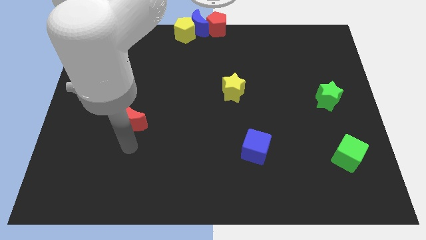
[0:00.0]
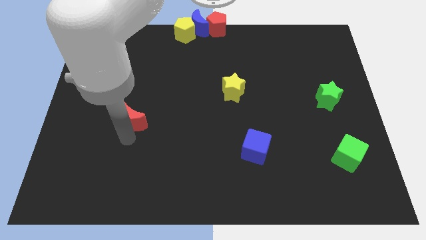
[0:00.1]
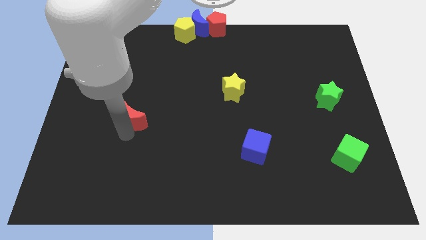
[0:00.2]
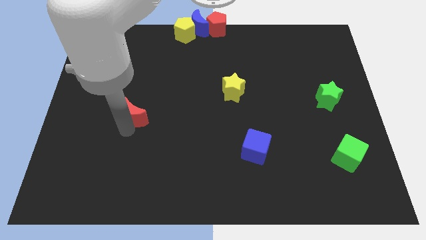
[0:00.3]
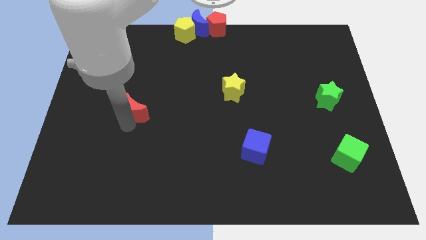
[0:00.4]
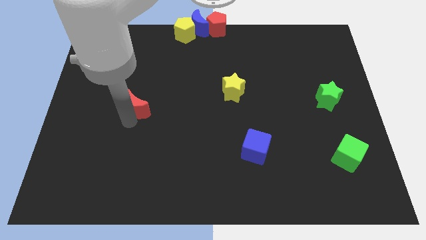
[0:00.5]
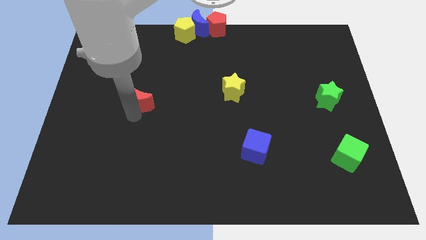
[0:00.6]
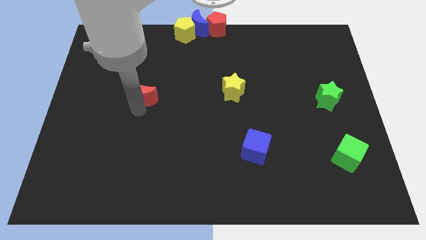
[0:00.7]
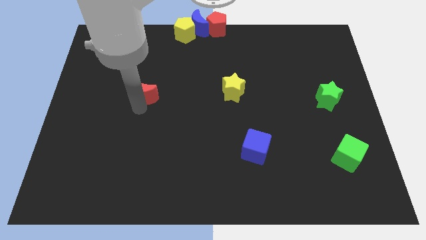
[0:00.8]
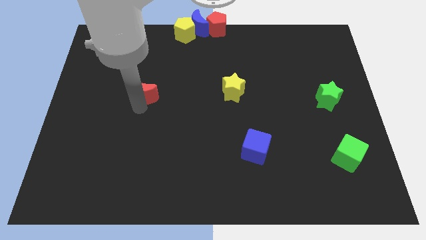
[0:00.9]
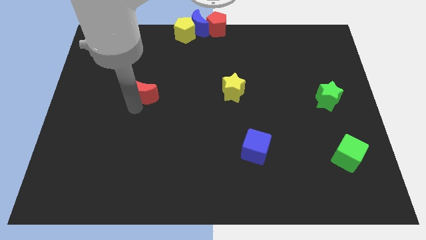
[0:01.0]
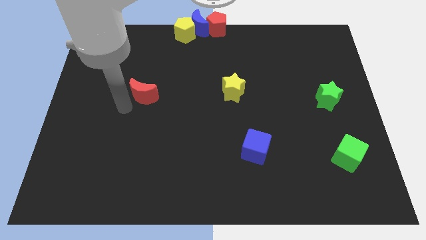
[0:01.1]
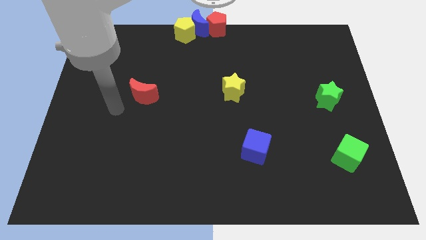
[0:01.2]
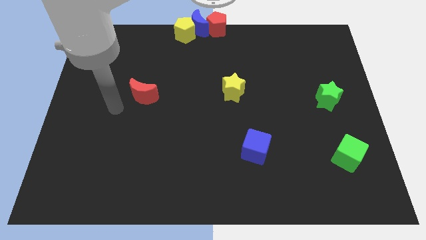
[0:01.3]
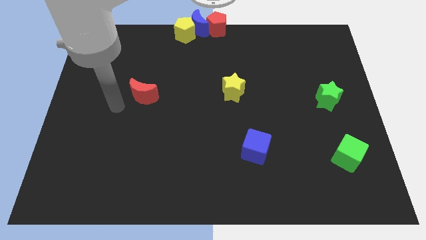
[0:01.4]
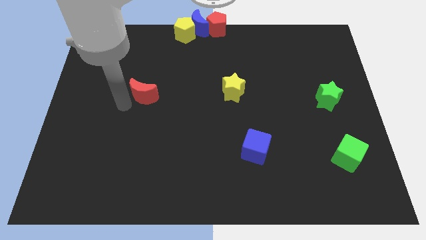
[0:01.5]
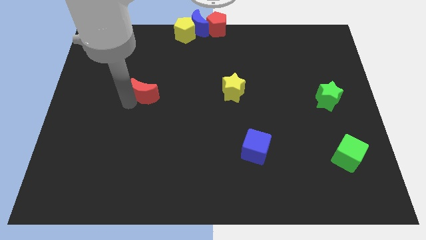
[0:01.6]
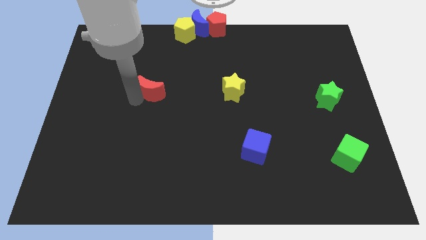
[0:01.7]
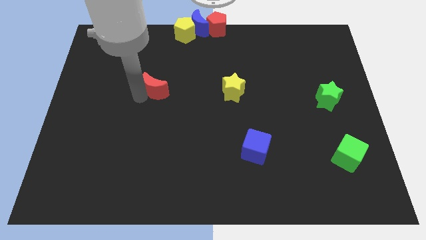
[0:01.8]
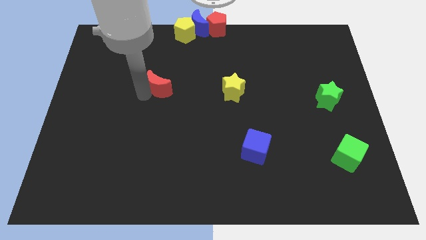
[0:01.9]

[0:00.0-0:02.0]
move the red crescent horizontally to the left side of the yellow star

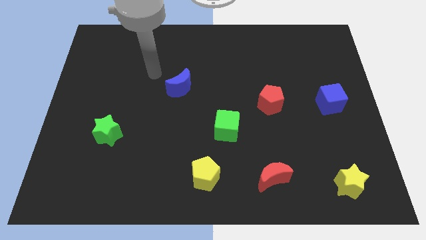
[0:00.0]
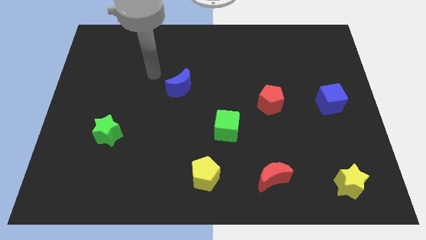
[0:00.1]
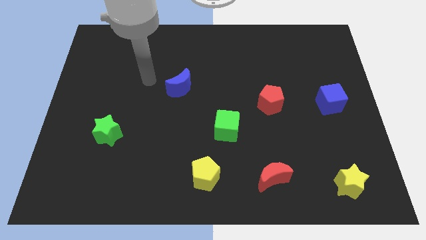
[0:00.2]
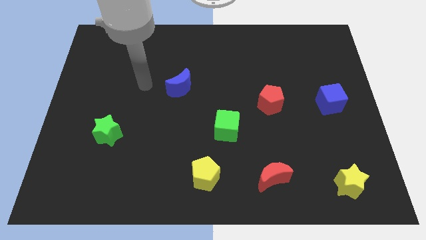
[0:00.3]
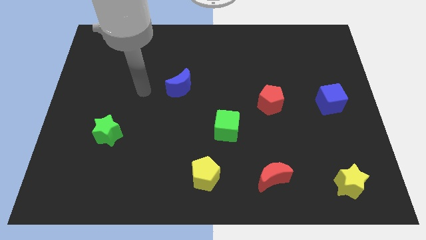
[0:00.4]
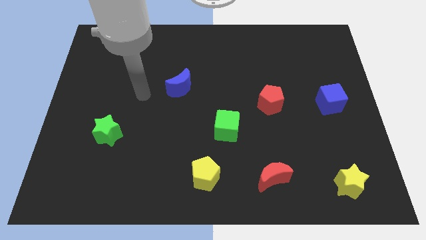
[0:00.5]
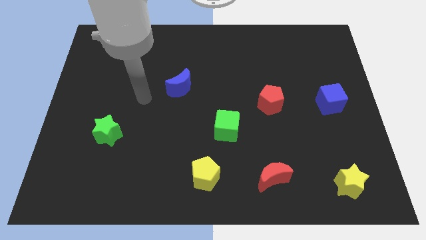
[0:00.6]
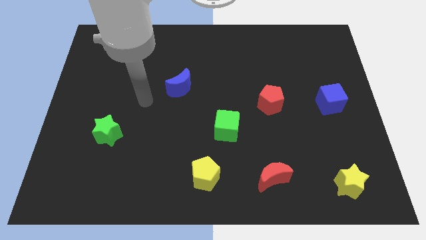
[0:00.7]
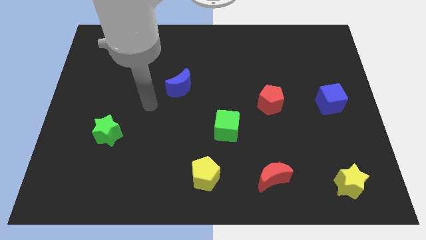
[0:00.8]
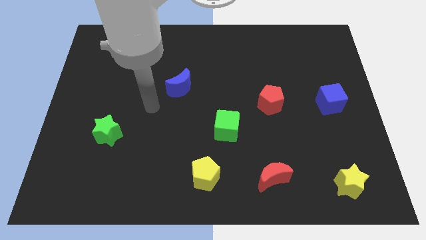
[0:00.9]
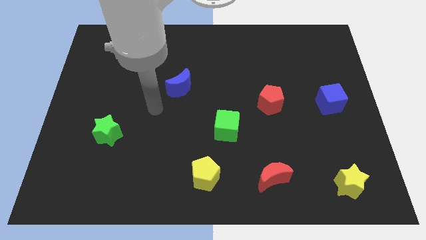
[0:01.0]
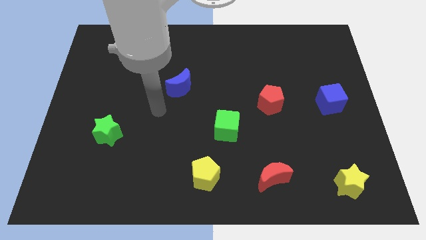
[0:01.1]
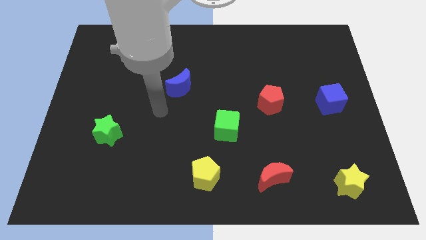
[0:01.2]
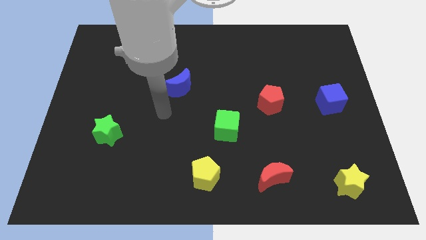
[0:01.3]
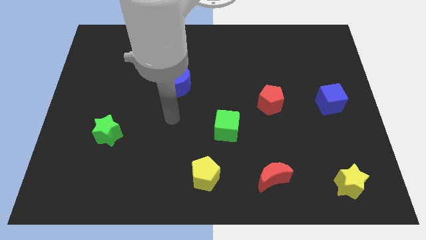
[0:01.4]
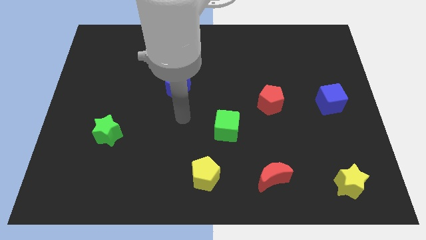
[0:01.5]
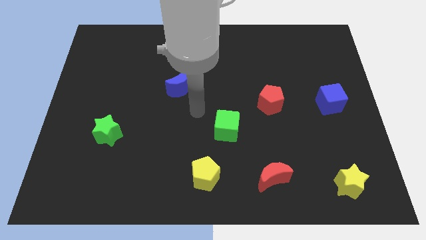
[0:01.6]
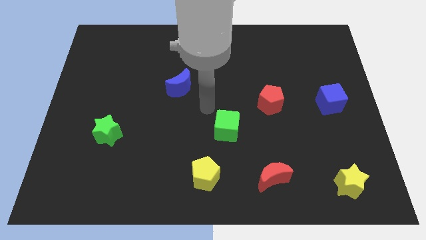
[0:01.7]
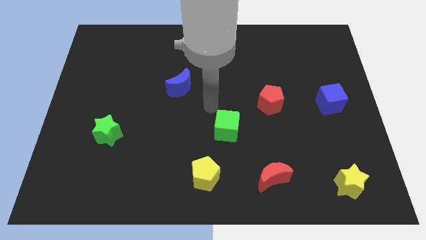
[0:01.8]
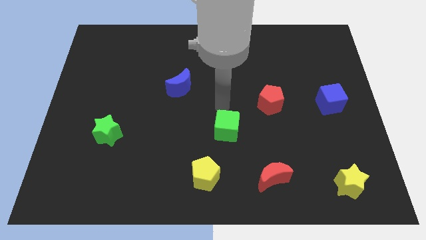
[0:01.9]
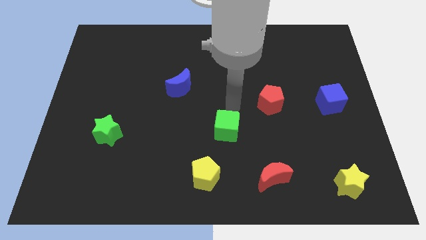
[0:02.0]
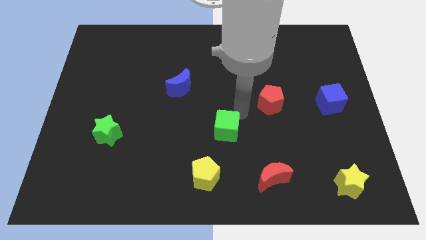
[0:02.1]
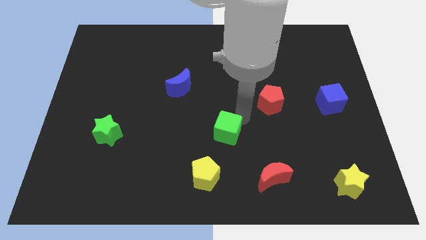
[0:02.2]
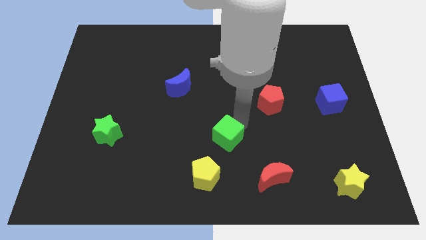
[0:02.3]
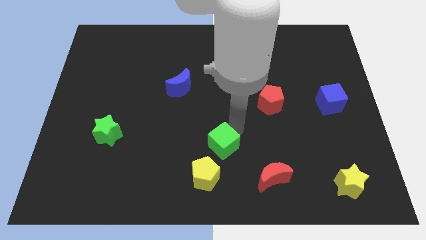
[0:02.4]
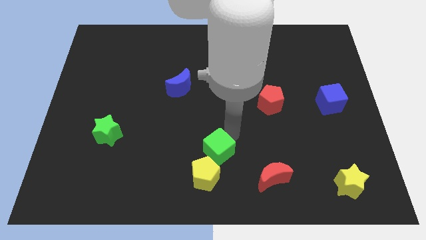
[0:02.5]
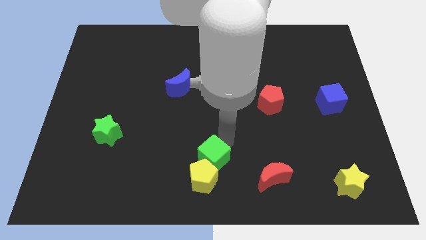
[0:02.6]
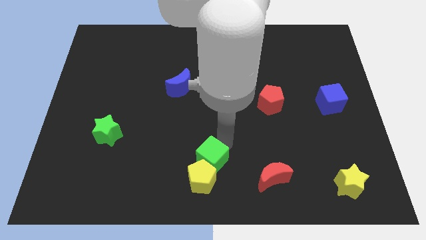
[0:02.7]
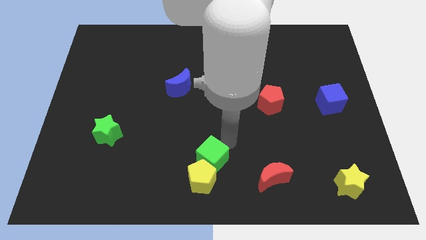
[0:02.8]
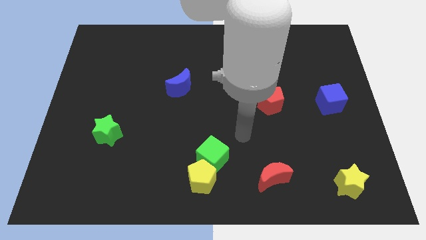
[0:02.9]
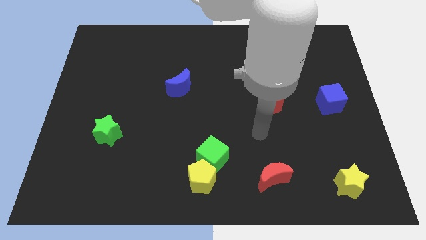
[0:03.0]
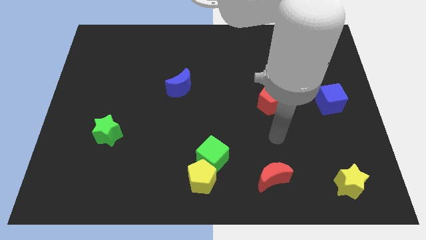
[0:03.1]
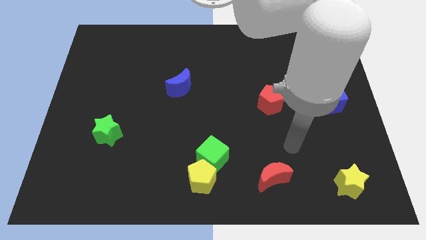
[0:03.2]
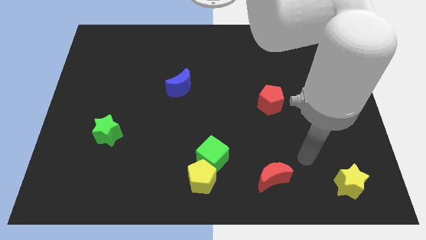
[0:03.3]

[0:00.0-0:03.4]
push the green cube into the yellow star

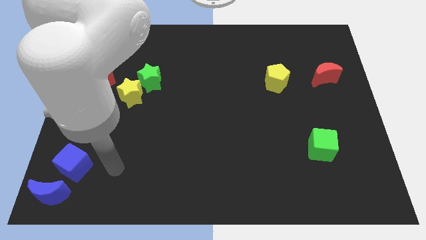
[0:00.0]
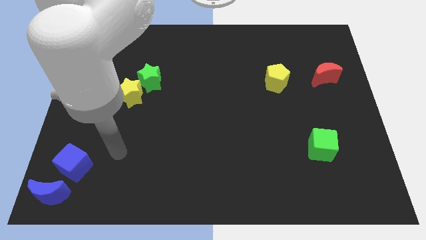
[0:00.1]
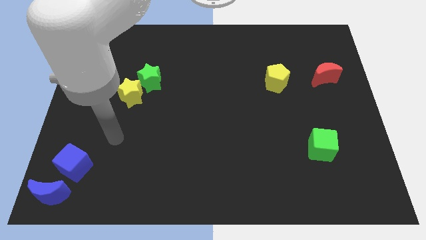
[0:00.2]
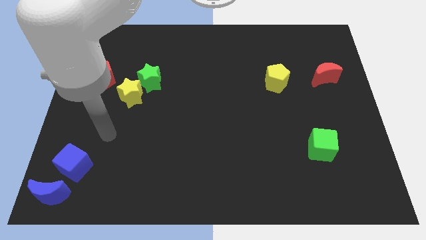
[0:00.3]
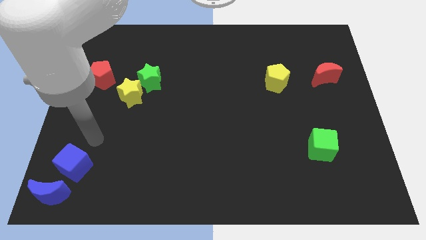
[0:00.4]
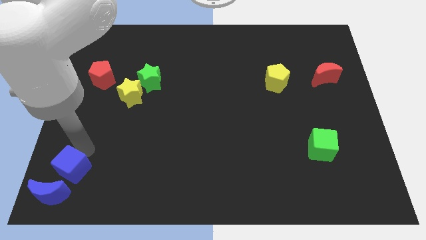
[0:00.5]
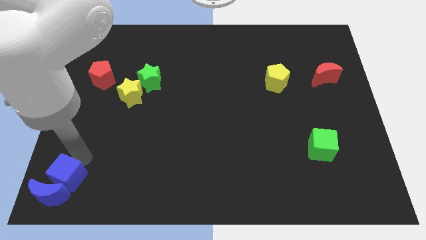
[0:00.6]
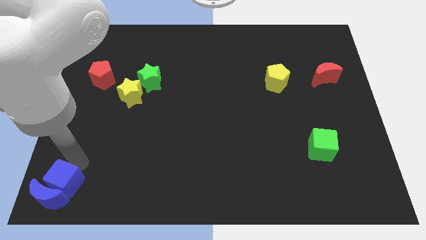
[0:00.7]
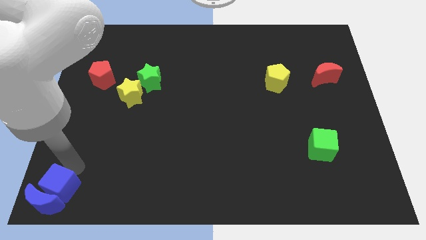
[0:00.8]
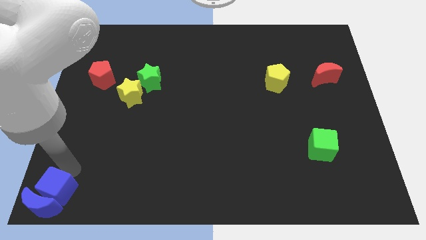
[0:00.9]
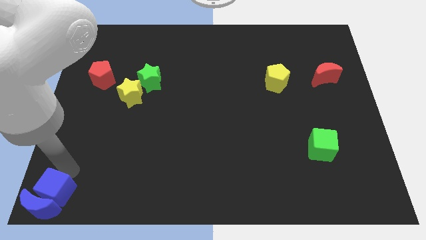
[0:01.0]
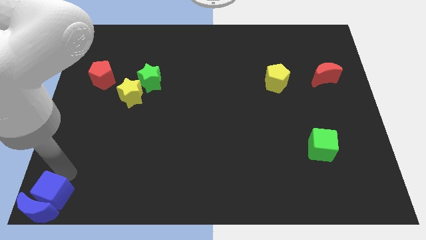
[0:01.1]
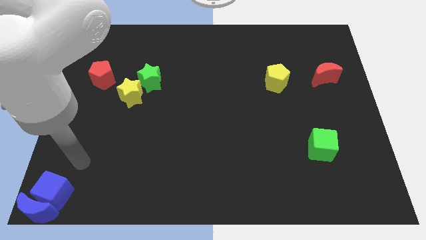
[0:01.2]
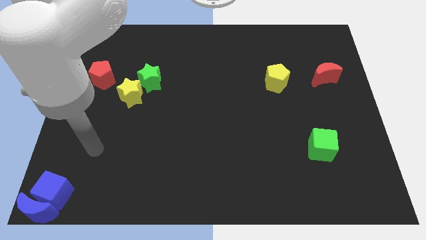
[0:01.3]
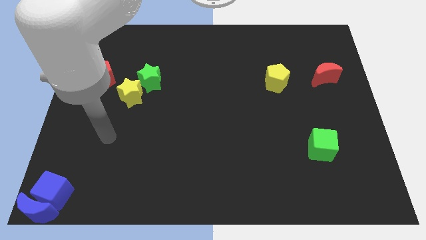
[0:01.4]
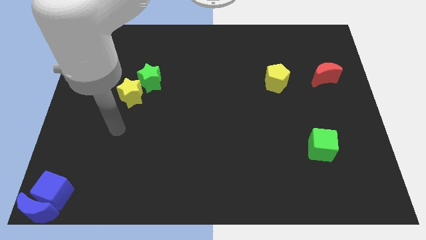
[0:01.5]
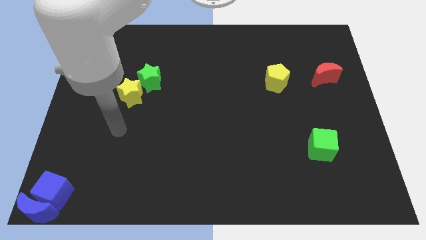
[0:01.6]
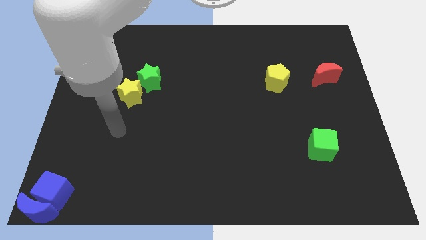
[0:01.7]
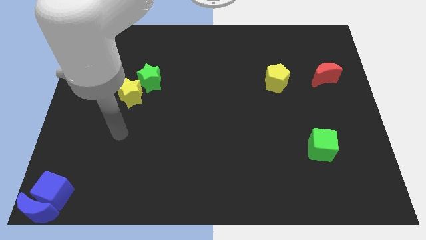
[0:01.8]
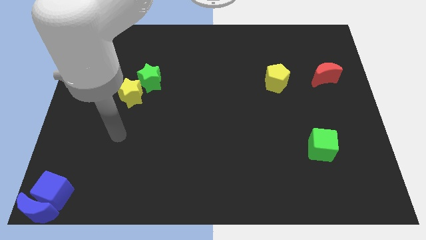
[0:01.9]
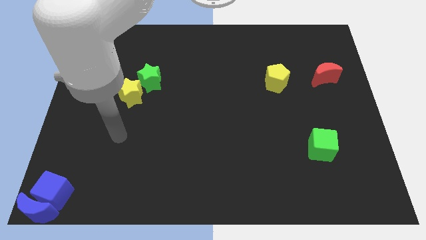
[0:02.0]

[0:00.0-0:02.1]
slide blue blocks to bottom left corner

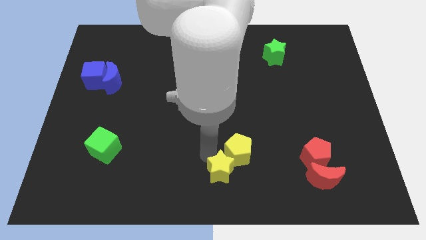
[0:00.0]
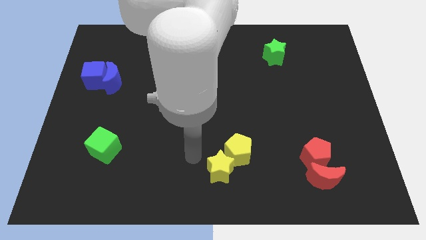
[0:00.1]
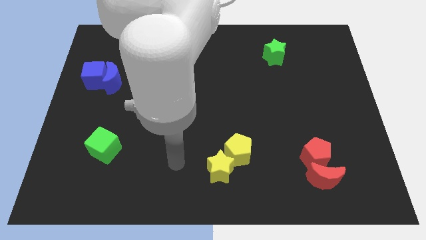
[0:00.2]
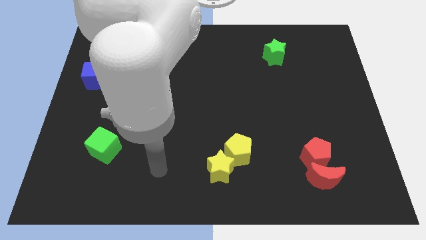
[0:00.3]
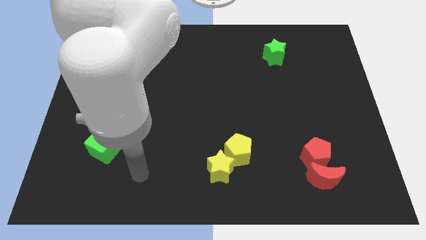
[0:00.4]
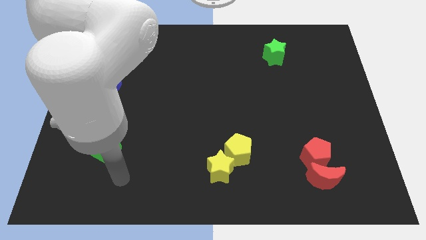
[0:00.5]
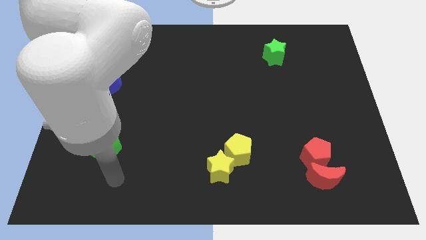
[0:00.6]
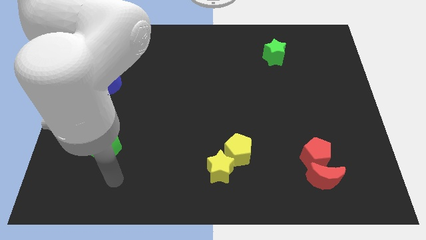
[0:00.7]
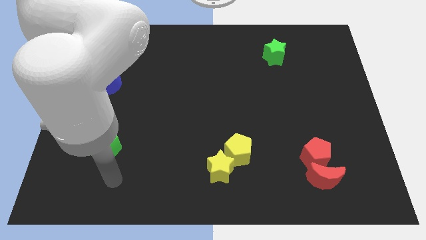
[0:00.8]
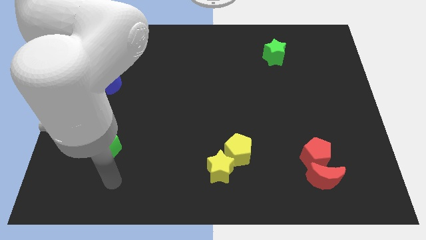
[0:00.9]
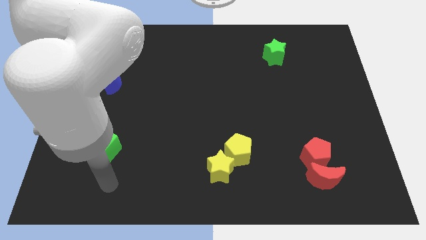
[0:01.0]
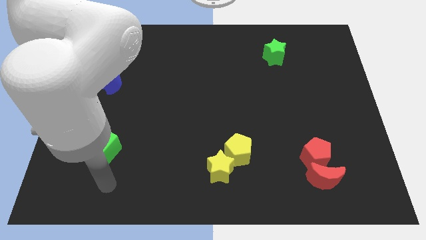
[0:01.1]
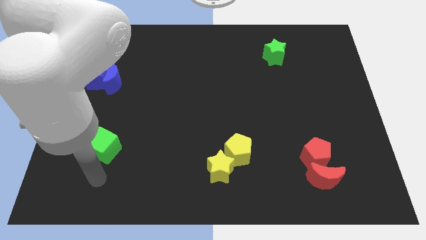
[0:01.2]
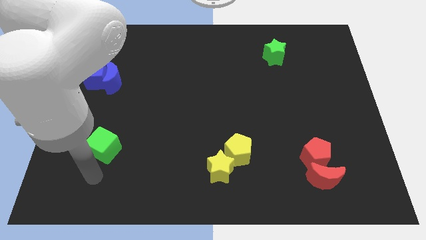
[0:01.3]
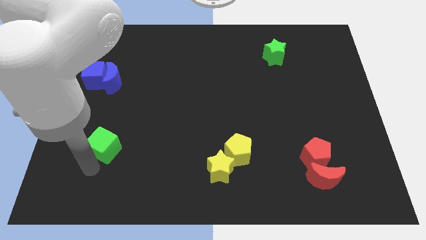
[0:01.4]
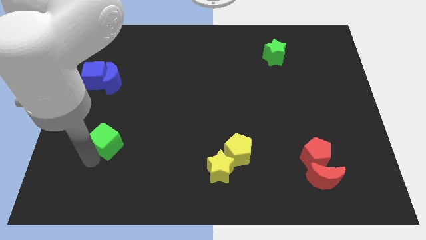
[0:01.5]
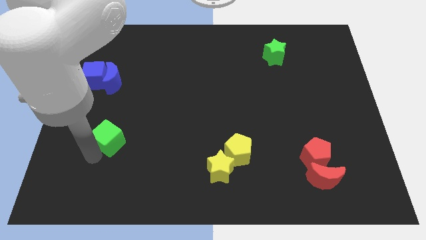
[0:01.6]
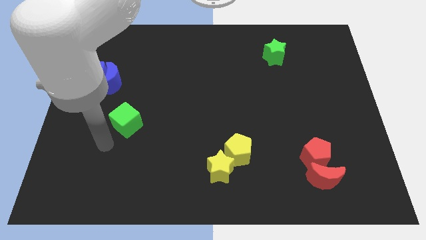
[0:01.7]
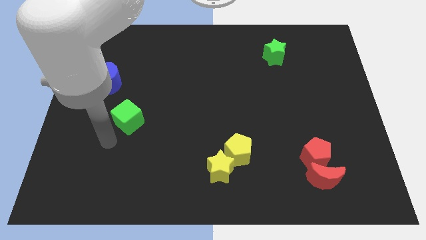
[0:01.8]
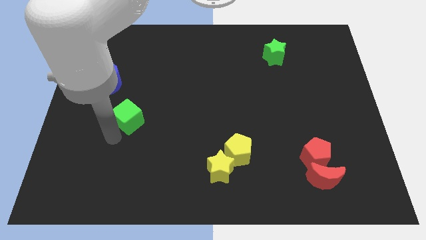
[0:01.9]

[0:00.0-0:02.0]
move the green cube to the bottom right of the blue crescent
